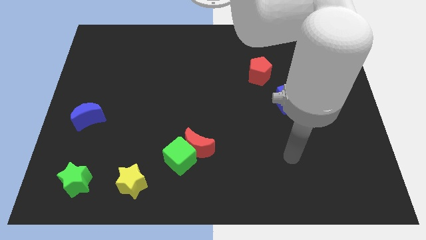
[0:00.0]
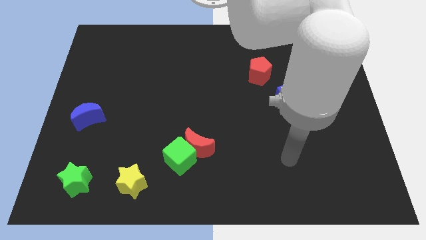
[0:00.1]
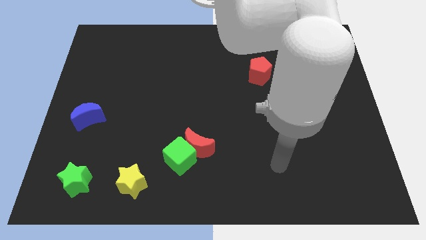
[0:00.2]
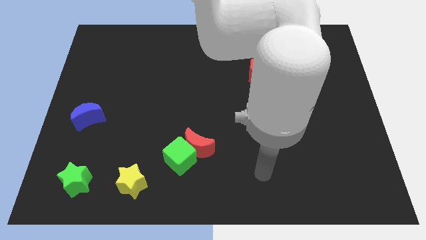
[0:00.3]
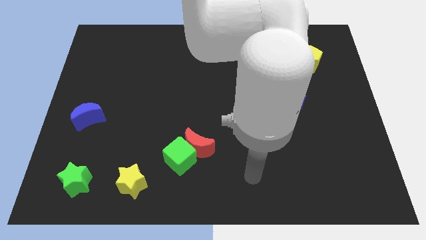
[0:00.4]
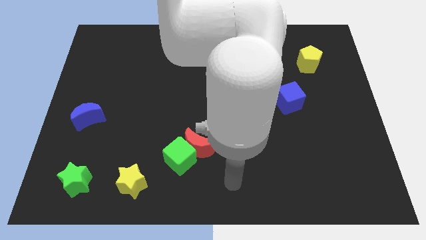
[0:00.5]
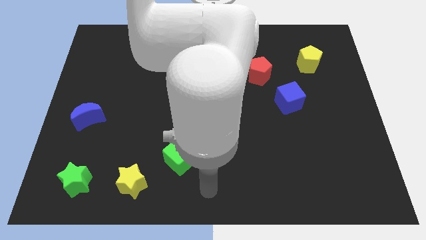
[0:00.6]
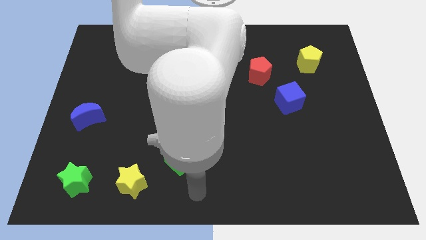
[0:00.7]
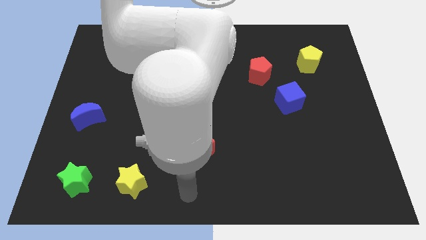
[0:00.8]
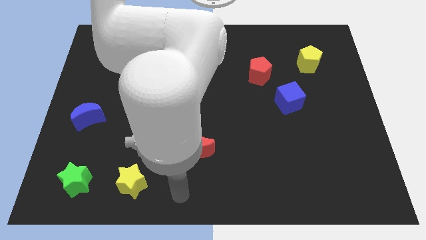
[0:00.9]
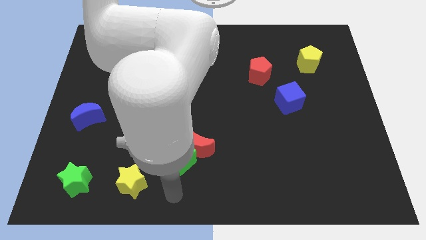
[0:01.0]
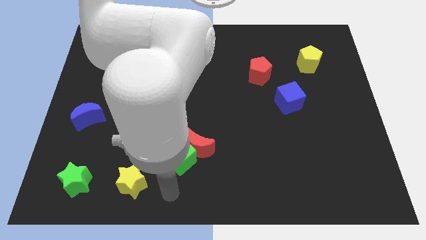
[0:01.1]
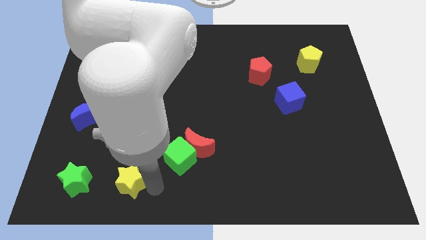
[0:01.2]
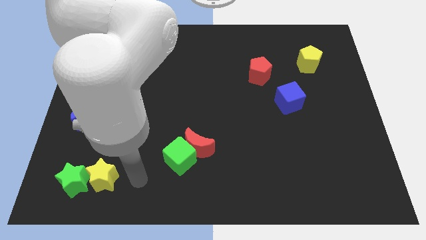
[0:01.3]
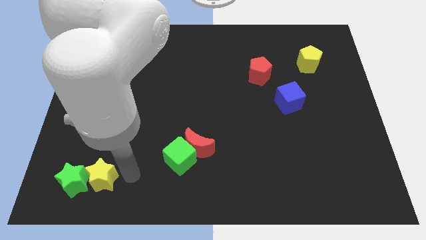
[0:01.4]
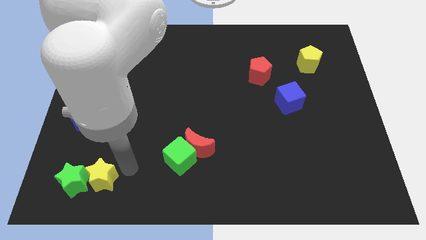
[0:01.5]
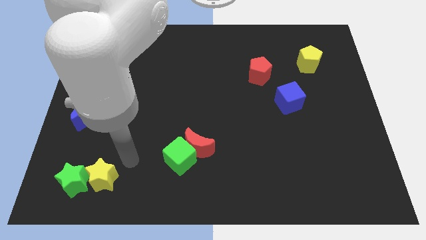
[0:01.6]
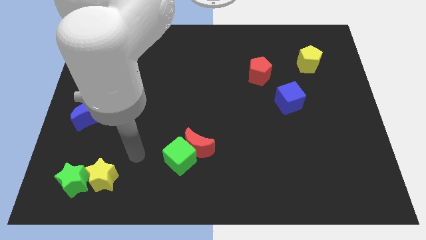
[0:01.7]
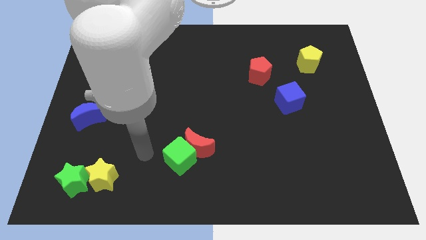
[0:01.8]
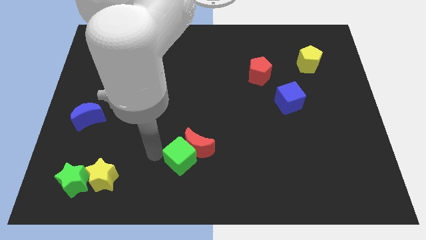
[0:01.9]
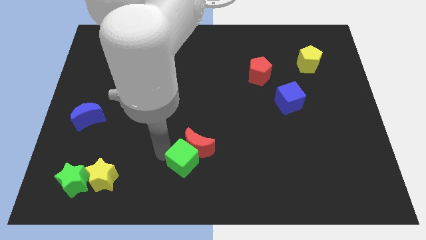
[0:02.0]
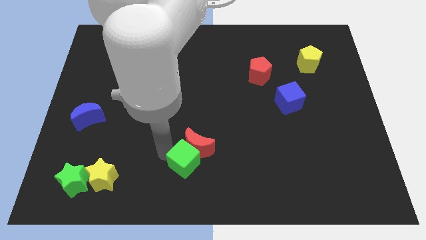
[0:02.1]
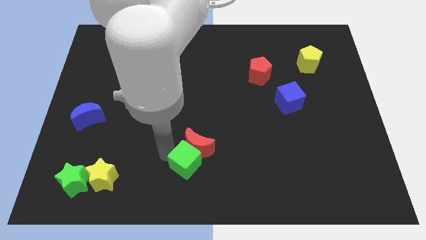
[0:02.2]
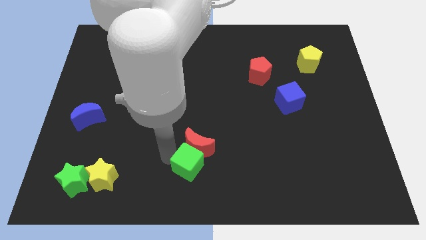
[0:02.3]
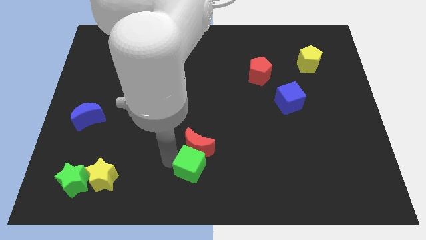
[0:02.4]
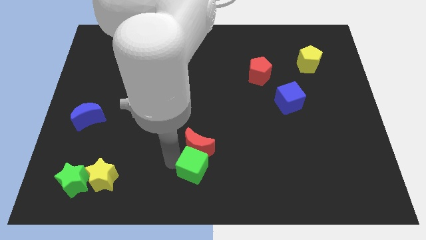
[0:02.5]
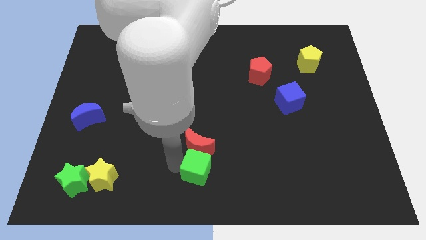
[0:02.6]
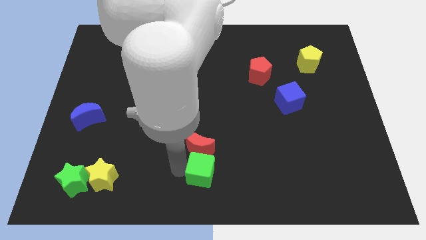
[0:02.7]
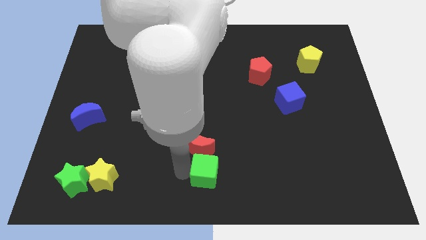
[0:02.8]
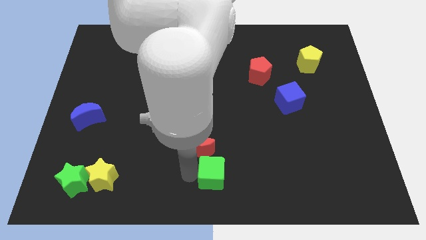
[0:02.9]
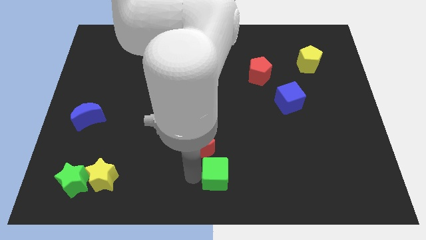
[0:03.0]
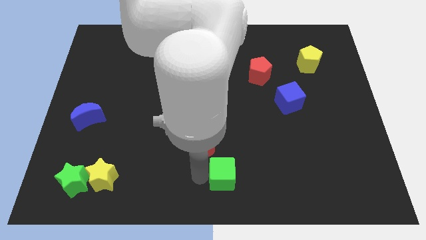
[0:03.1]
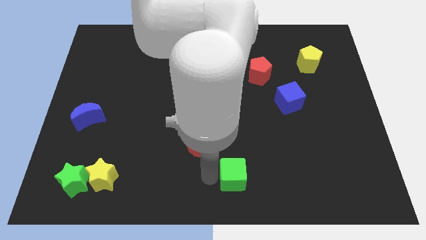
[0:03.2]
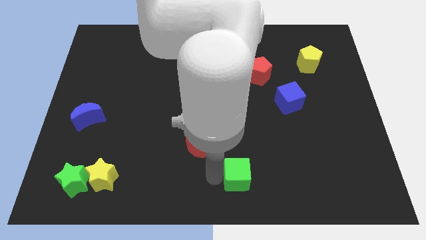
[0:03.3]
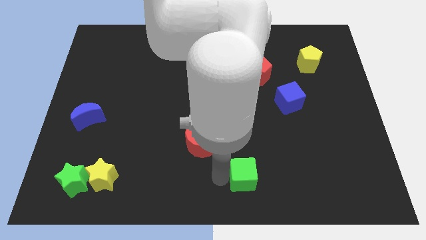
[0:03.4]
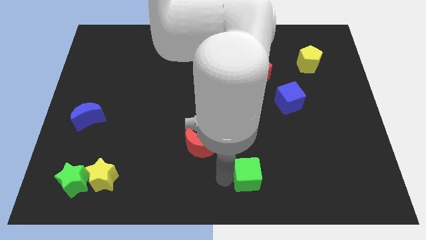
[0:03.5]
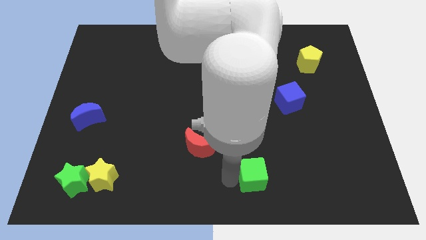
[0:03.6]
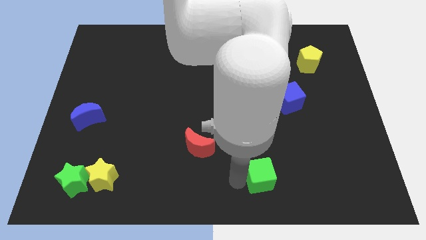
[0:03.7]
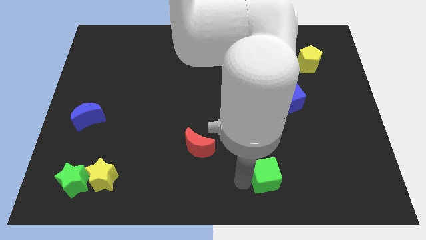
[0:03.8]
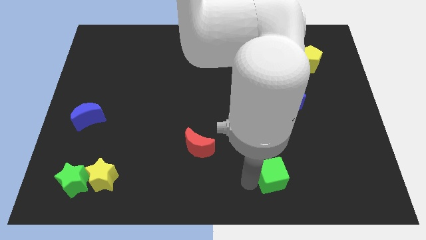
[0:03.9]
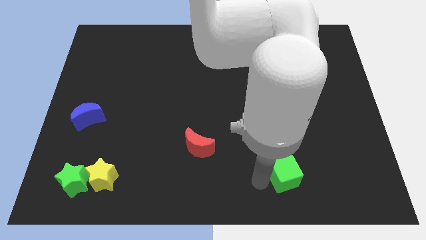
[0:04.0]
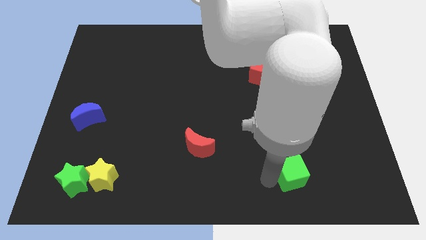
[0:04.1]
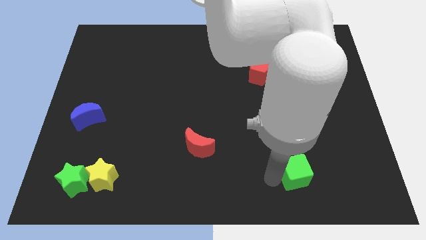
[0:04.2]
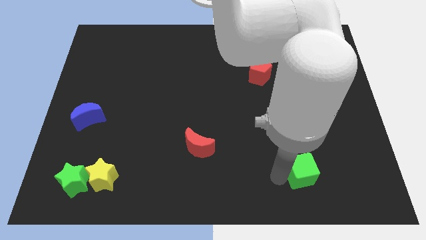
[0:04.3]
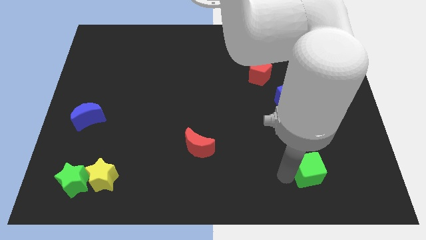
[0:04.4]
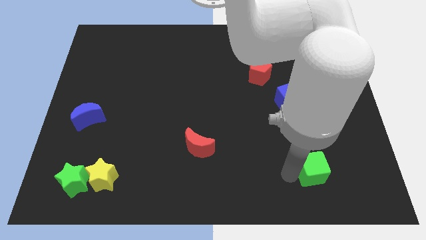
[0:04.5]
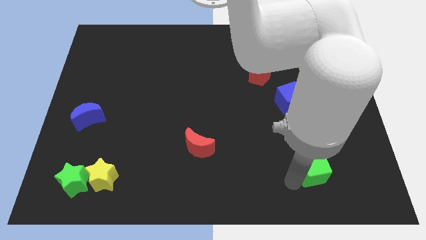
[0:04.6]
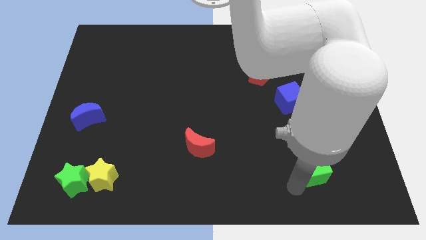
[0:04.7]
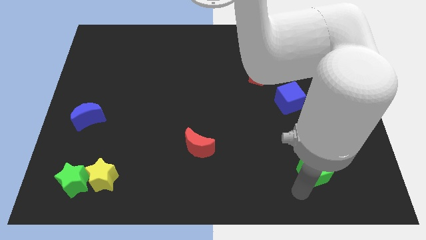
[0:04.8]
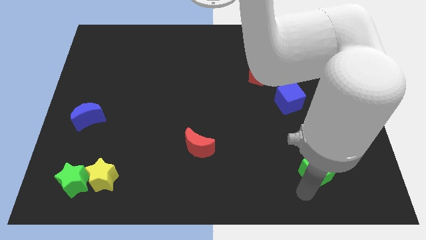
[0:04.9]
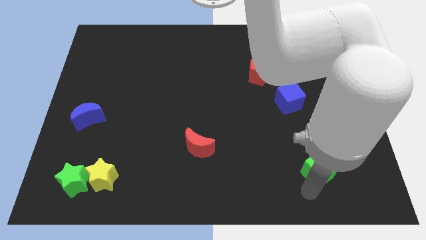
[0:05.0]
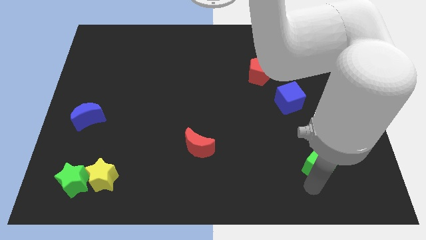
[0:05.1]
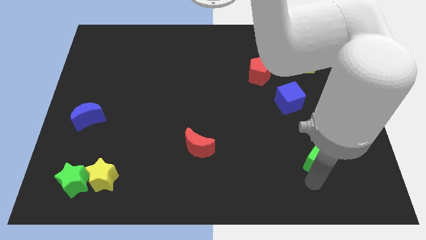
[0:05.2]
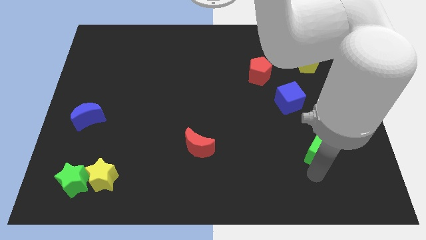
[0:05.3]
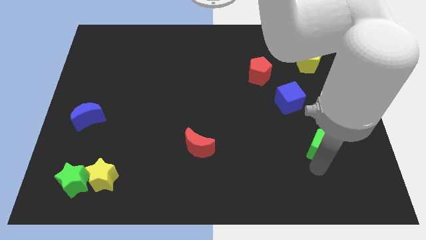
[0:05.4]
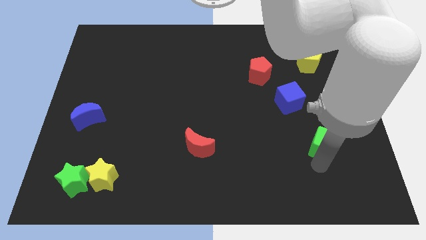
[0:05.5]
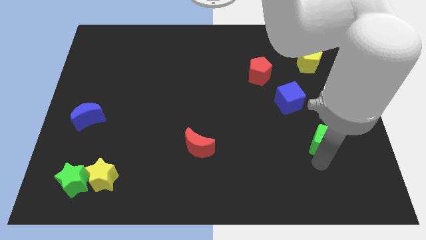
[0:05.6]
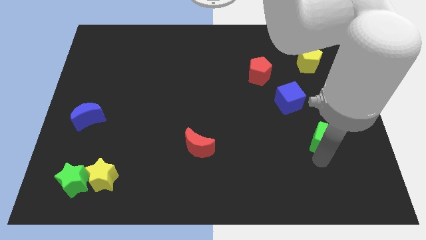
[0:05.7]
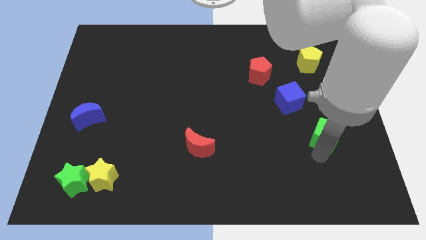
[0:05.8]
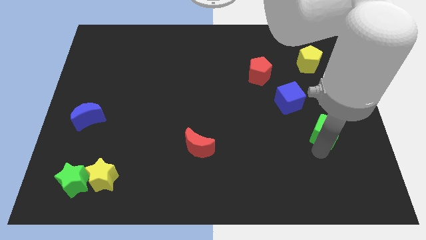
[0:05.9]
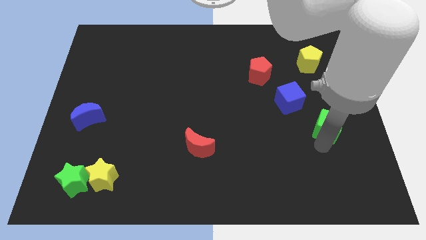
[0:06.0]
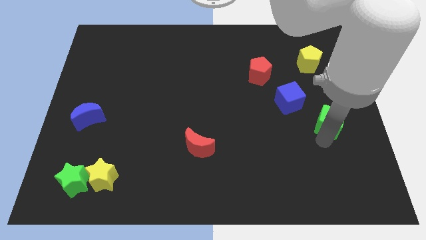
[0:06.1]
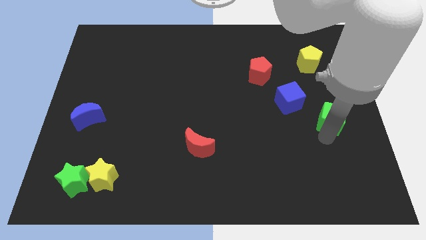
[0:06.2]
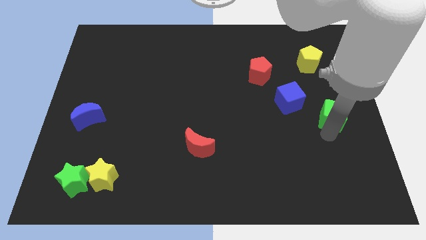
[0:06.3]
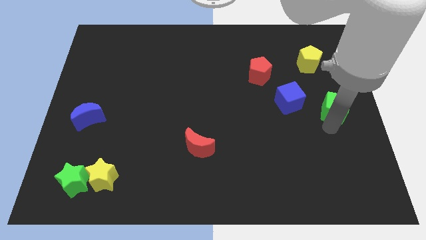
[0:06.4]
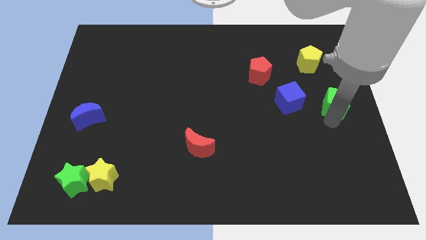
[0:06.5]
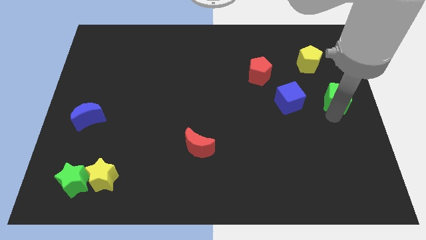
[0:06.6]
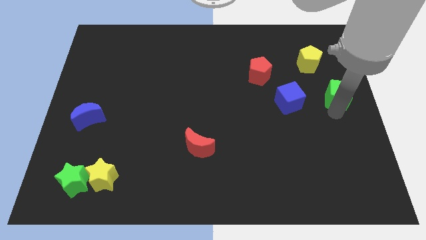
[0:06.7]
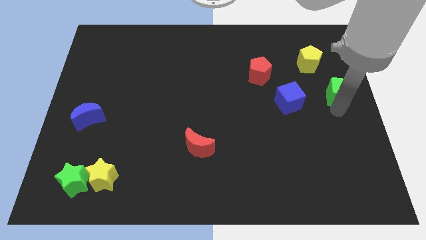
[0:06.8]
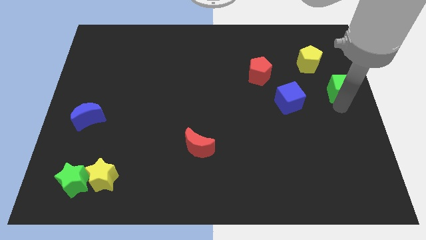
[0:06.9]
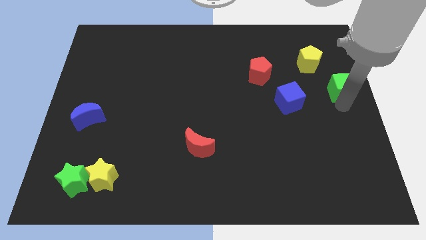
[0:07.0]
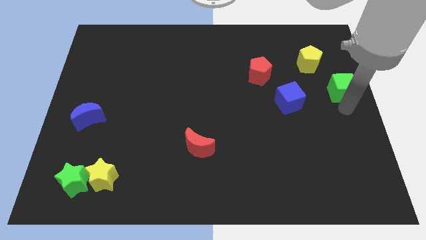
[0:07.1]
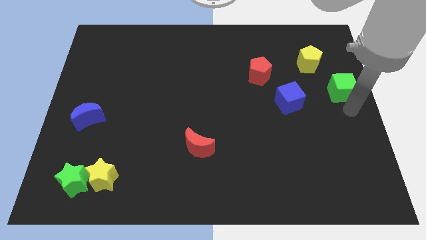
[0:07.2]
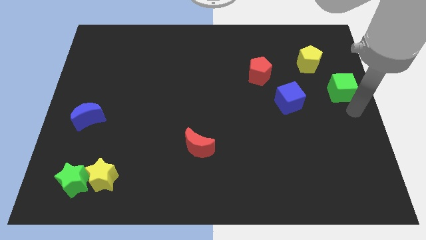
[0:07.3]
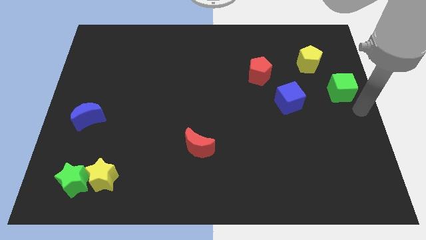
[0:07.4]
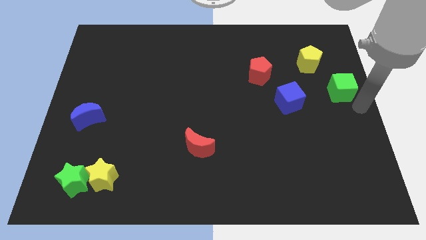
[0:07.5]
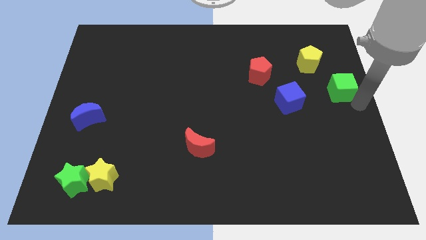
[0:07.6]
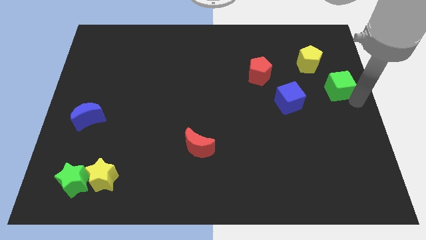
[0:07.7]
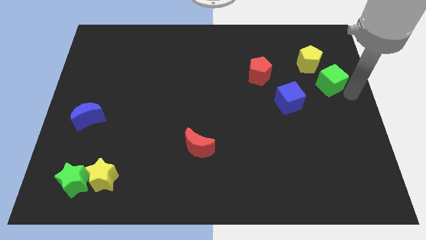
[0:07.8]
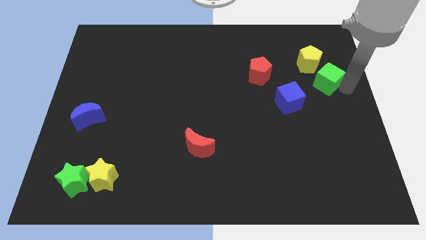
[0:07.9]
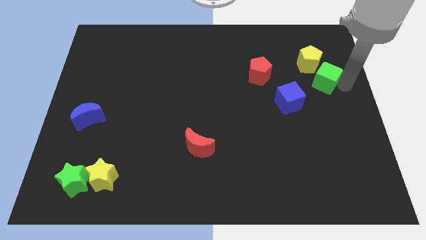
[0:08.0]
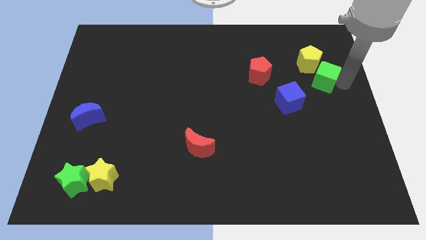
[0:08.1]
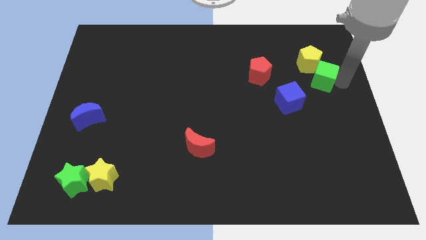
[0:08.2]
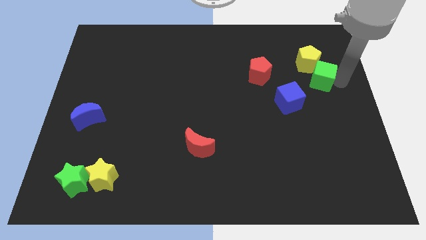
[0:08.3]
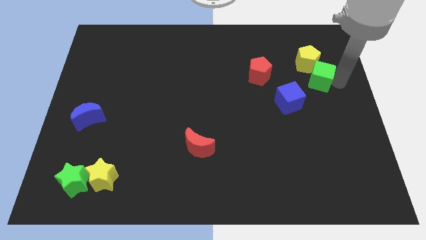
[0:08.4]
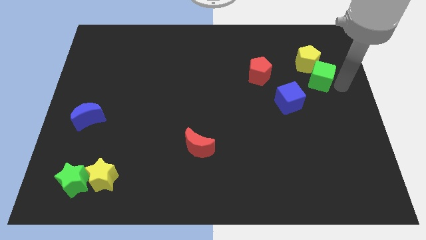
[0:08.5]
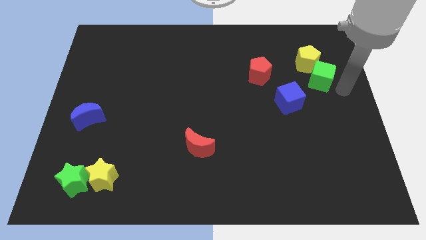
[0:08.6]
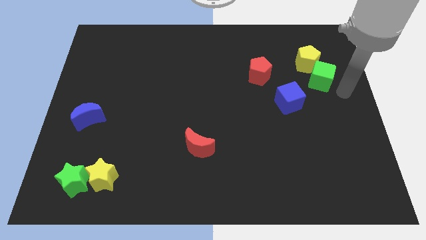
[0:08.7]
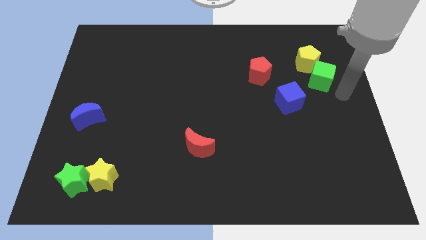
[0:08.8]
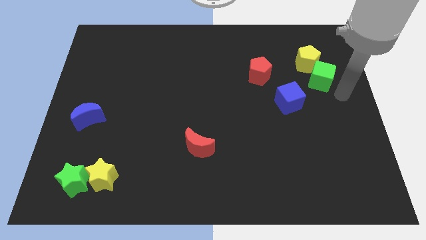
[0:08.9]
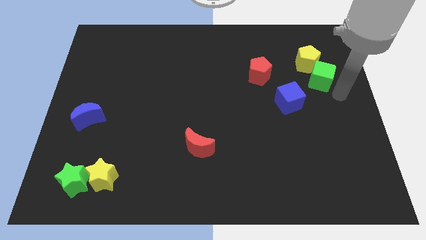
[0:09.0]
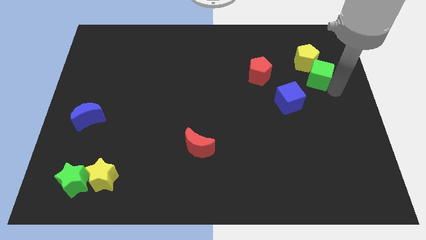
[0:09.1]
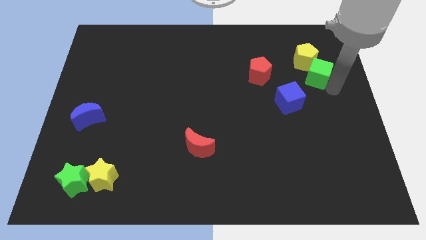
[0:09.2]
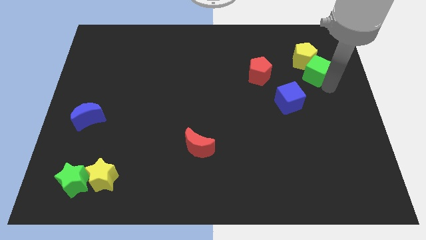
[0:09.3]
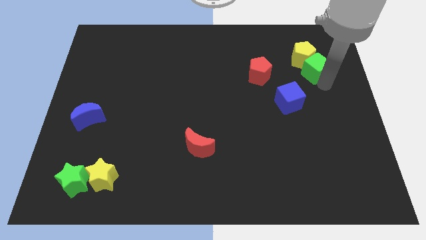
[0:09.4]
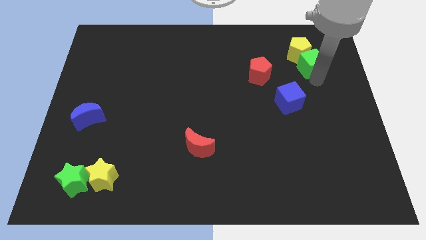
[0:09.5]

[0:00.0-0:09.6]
push the green cube close to the yellow pentagon
